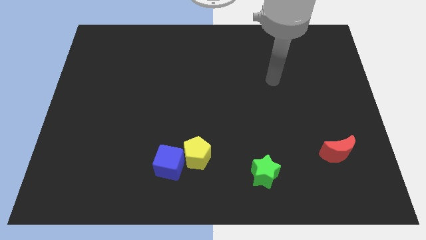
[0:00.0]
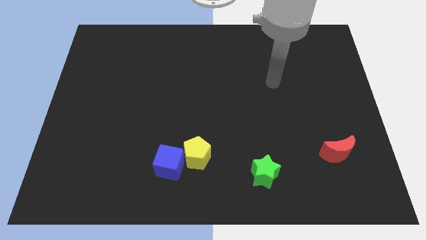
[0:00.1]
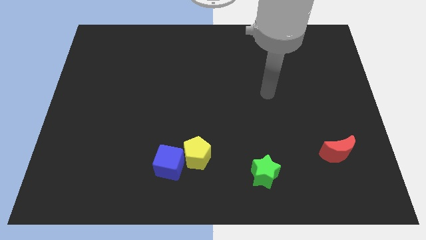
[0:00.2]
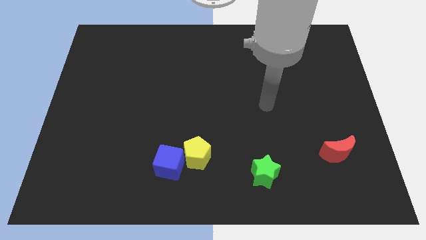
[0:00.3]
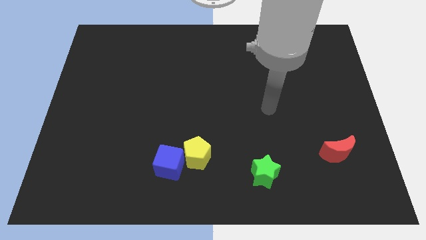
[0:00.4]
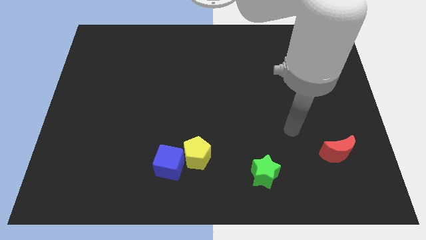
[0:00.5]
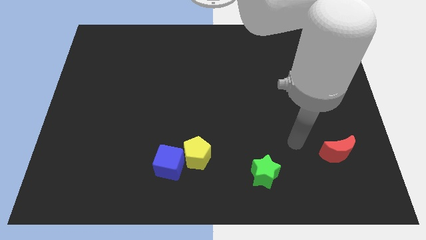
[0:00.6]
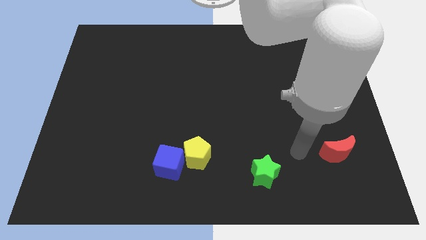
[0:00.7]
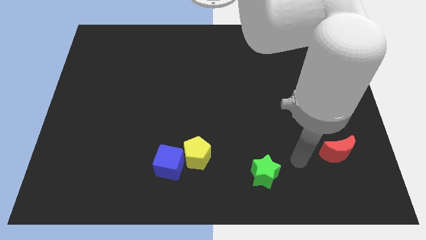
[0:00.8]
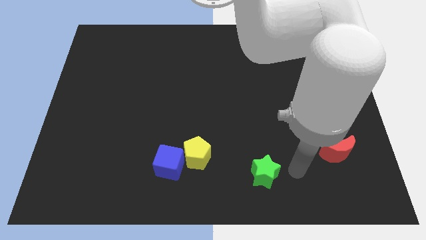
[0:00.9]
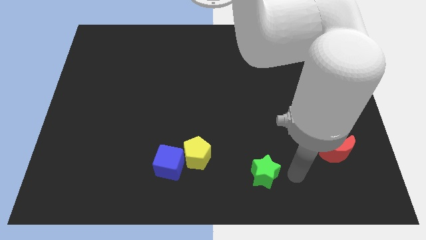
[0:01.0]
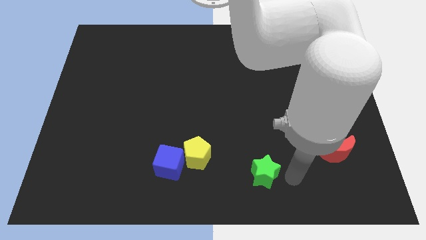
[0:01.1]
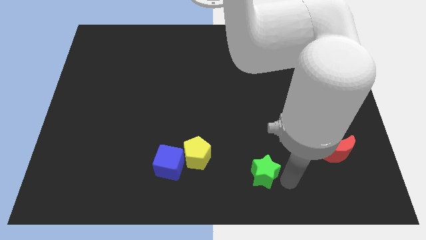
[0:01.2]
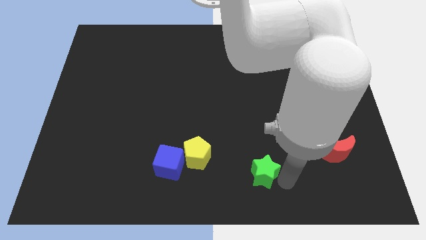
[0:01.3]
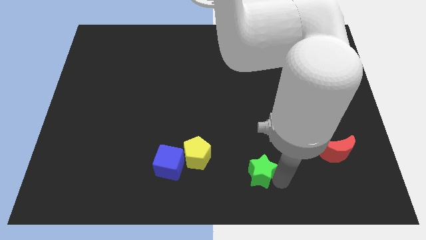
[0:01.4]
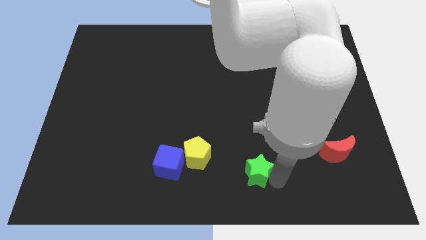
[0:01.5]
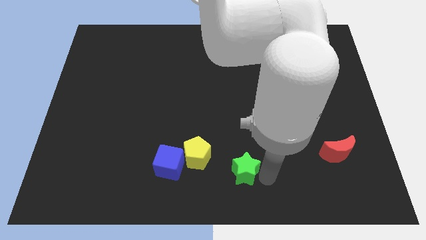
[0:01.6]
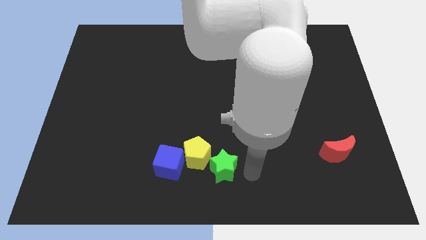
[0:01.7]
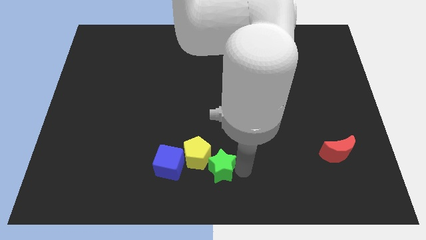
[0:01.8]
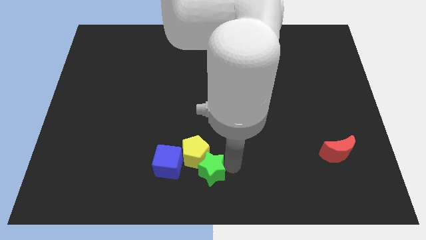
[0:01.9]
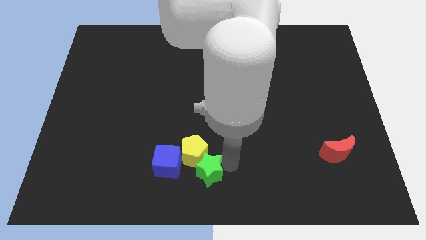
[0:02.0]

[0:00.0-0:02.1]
slide the green star next to the yellow block

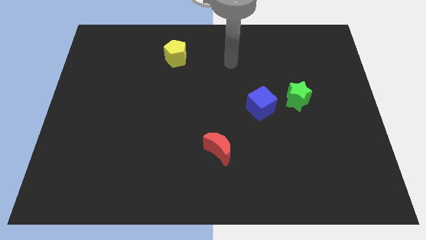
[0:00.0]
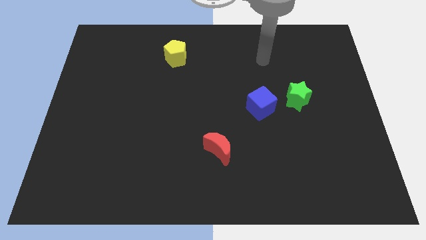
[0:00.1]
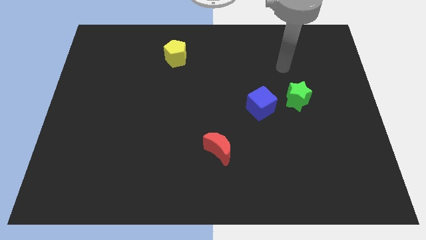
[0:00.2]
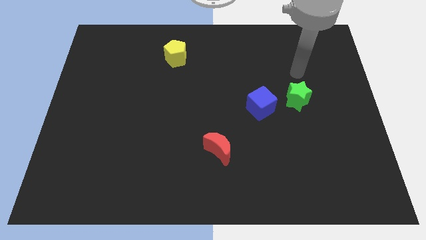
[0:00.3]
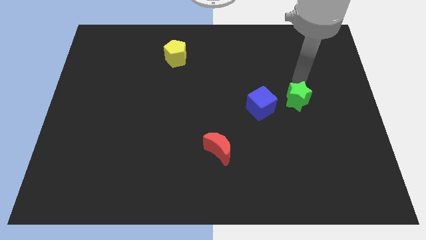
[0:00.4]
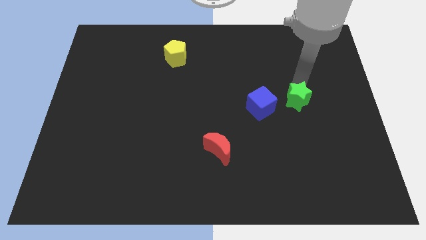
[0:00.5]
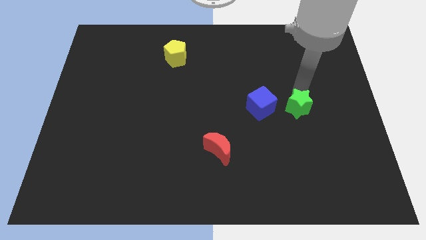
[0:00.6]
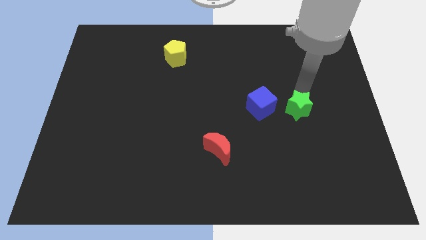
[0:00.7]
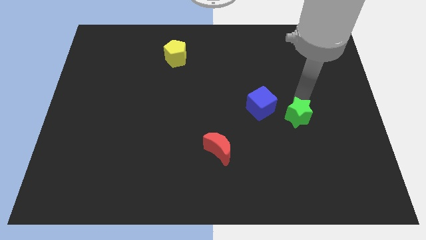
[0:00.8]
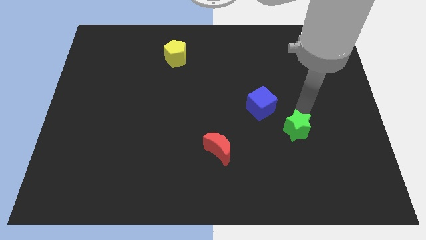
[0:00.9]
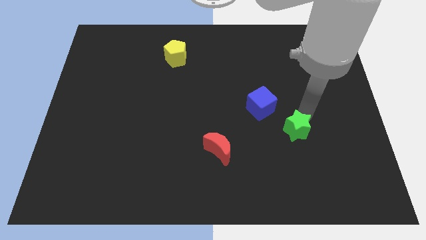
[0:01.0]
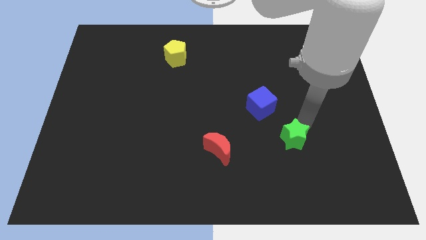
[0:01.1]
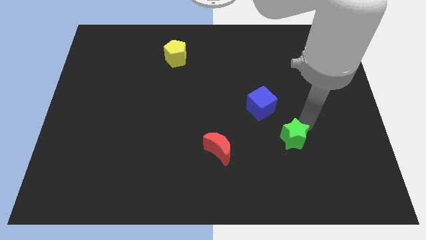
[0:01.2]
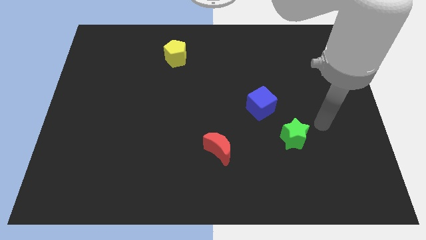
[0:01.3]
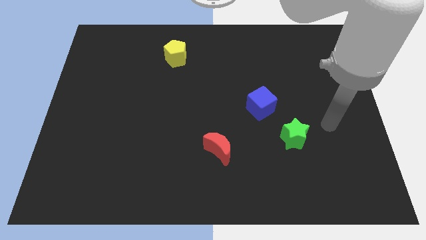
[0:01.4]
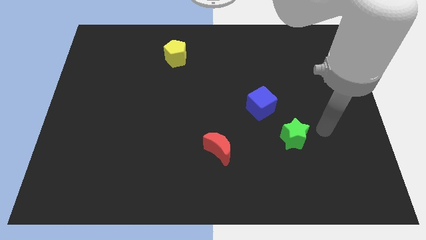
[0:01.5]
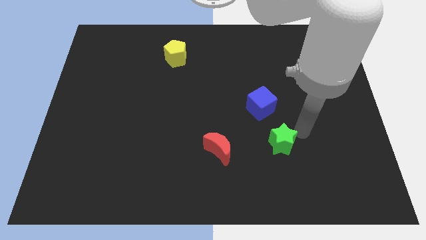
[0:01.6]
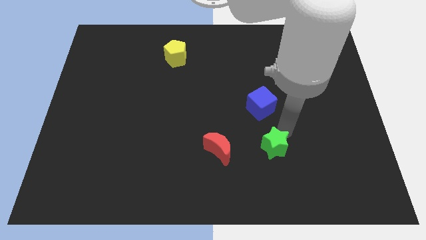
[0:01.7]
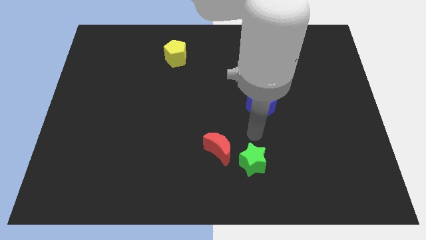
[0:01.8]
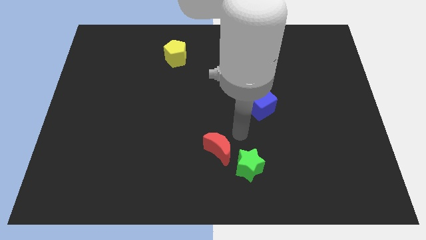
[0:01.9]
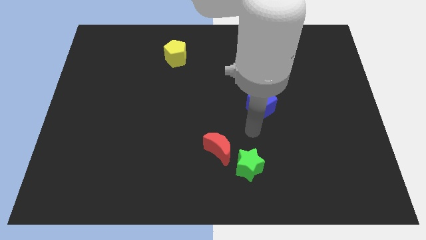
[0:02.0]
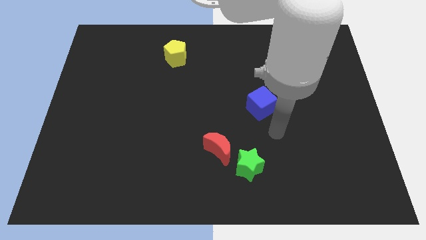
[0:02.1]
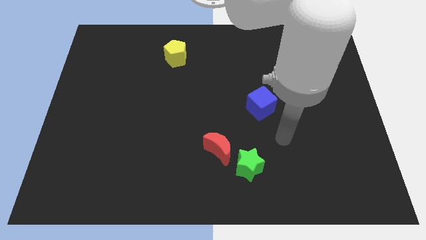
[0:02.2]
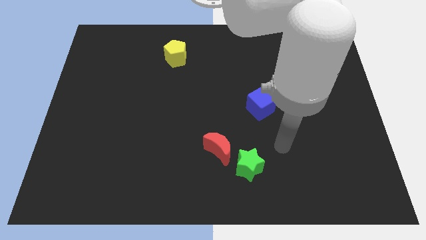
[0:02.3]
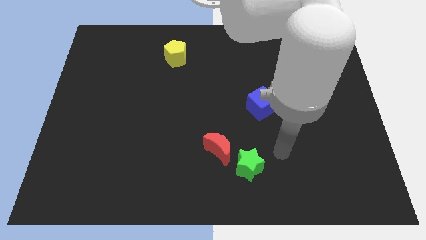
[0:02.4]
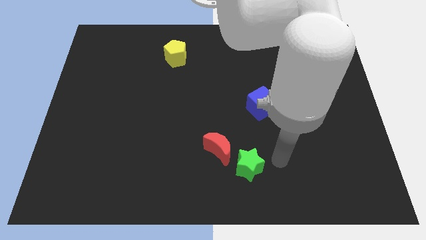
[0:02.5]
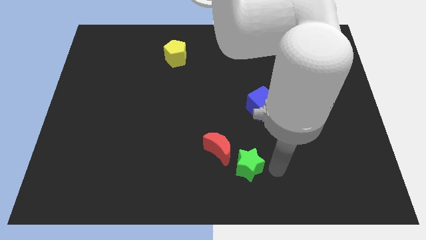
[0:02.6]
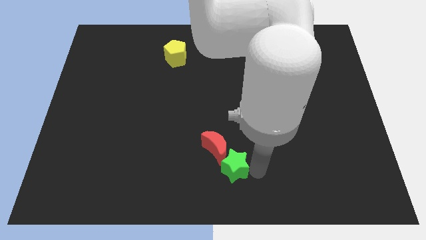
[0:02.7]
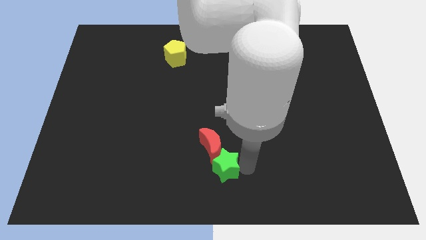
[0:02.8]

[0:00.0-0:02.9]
put the star close to the moon

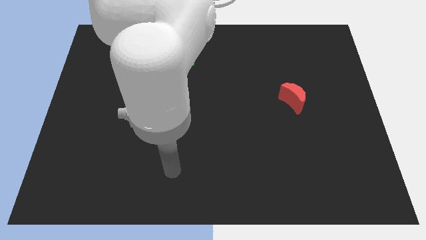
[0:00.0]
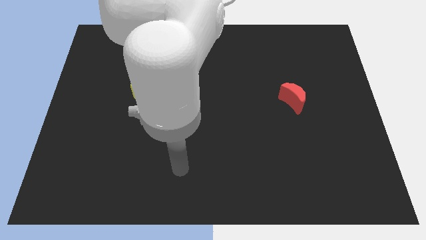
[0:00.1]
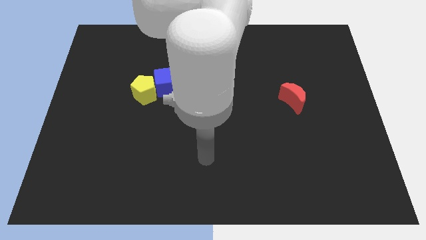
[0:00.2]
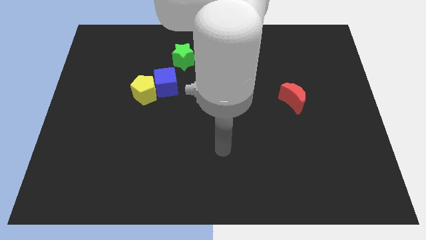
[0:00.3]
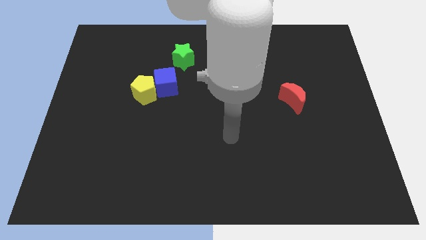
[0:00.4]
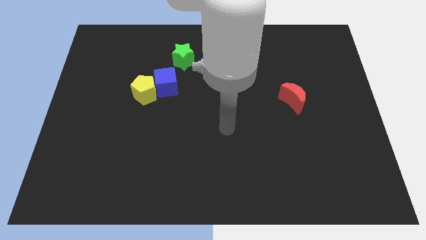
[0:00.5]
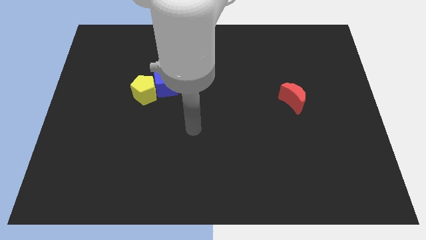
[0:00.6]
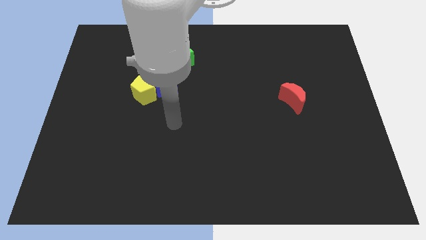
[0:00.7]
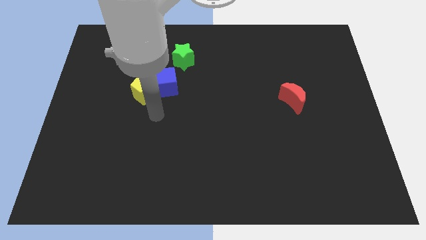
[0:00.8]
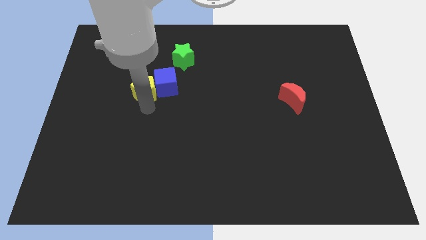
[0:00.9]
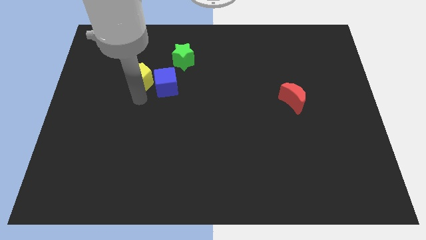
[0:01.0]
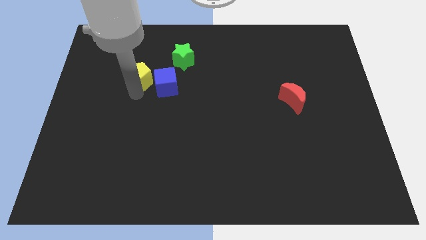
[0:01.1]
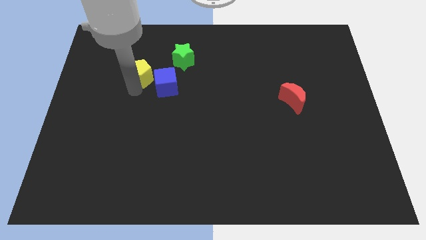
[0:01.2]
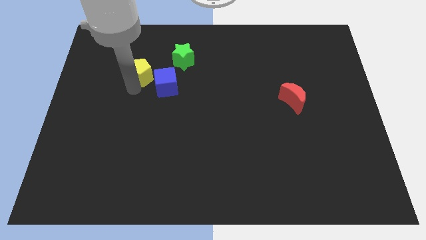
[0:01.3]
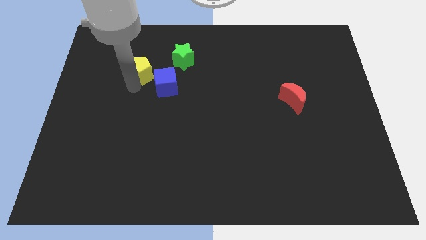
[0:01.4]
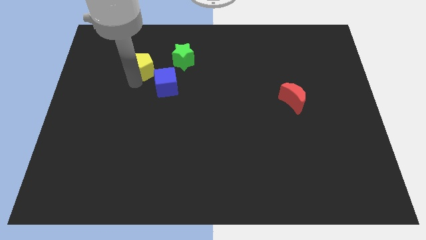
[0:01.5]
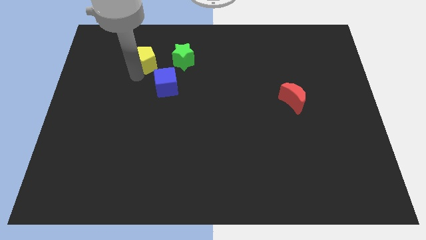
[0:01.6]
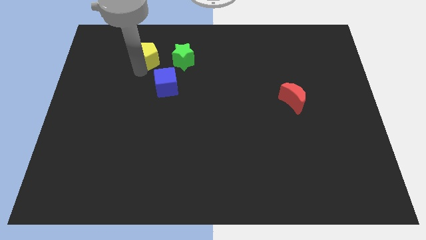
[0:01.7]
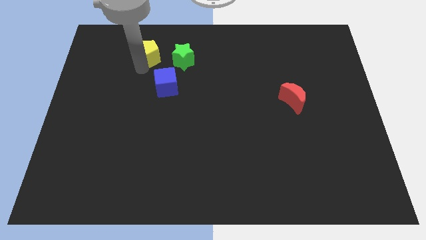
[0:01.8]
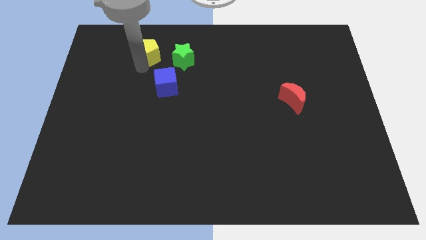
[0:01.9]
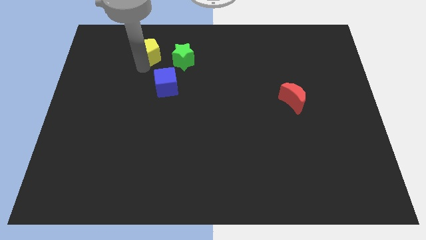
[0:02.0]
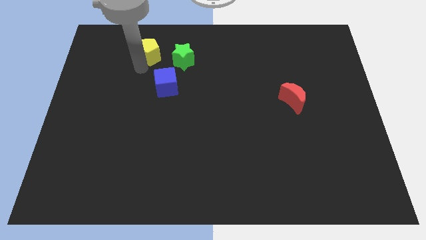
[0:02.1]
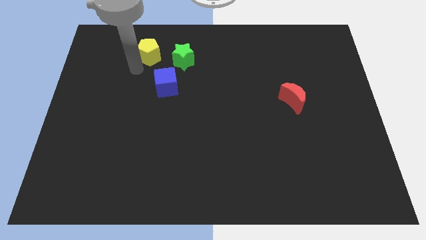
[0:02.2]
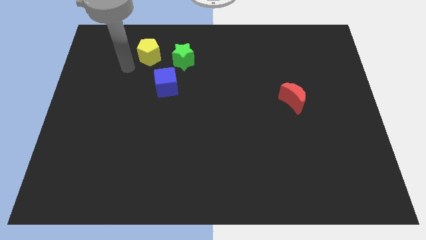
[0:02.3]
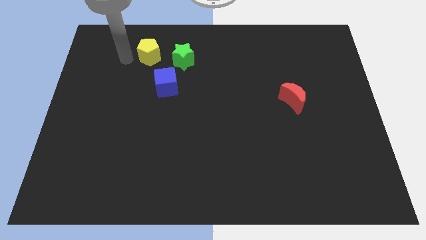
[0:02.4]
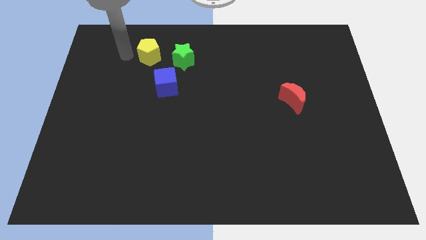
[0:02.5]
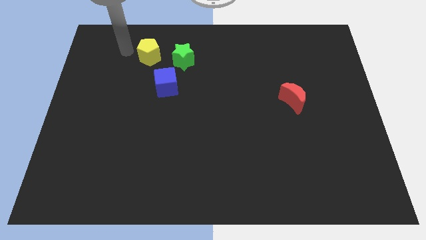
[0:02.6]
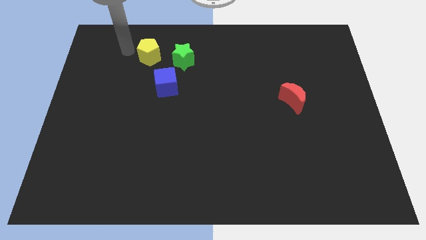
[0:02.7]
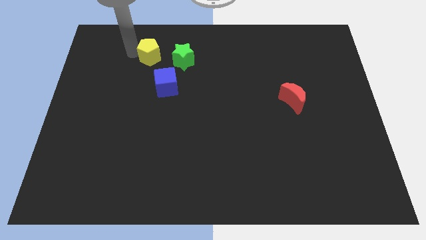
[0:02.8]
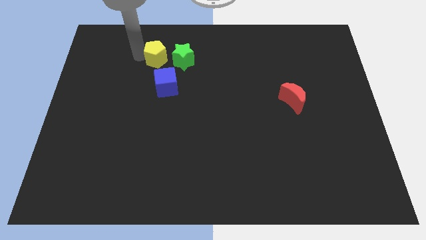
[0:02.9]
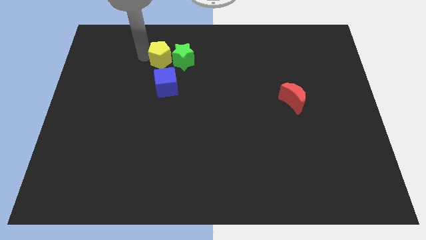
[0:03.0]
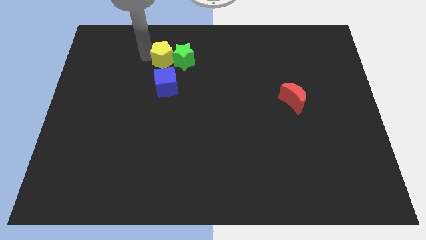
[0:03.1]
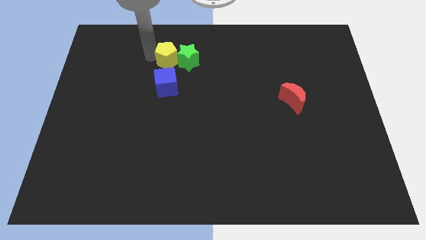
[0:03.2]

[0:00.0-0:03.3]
slide the yellow pentagon next to the green star
